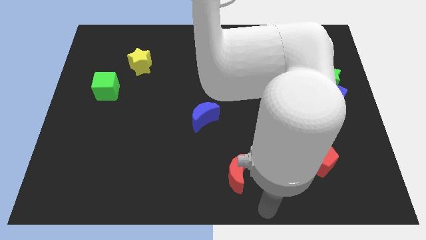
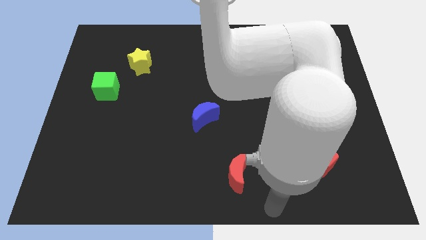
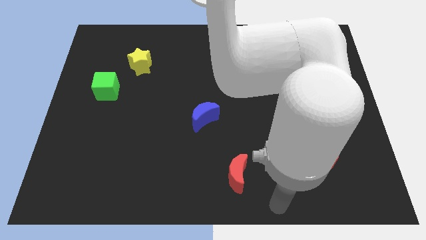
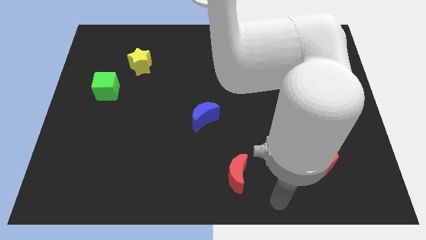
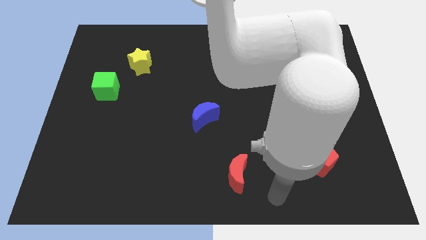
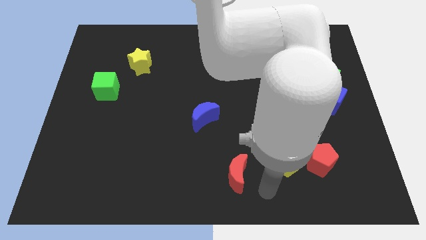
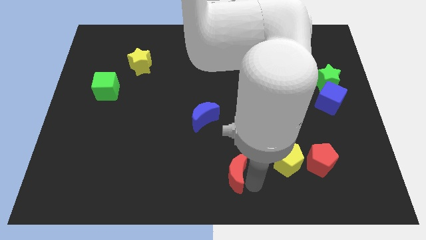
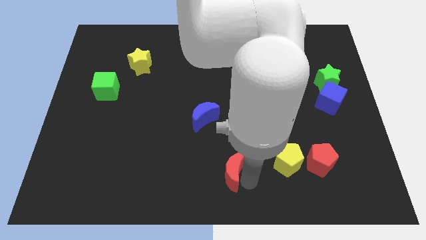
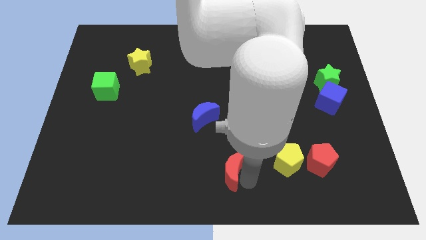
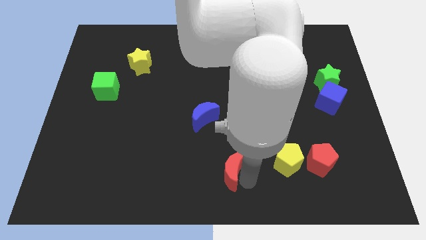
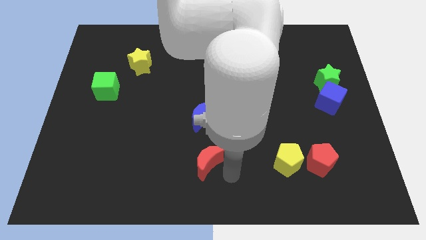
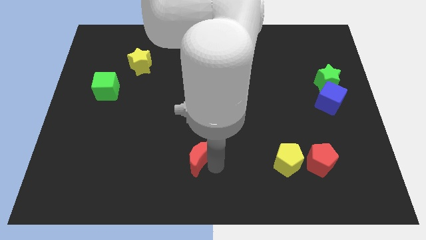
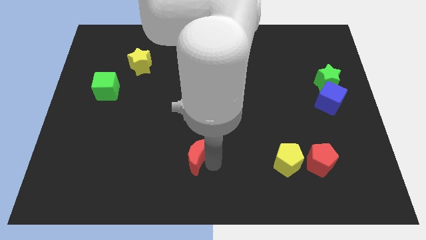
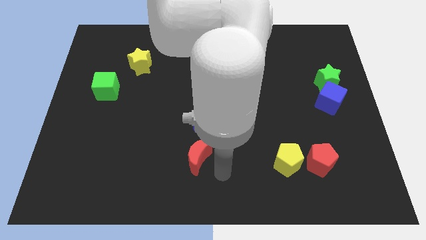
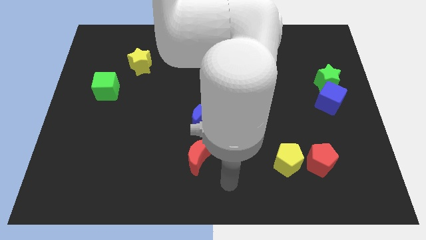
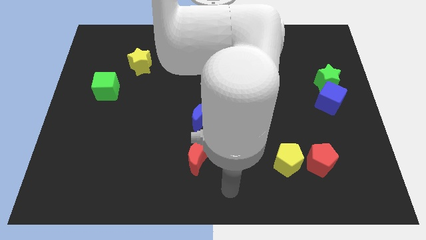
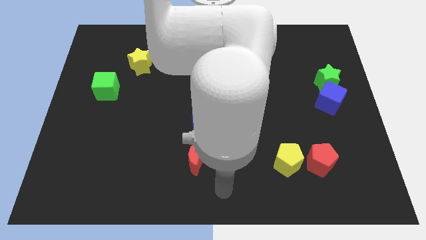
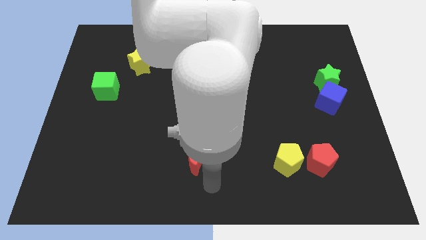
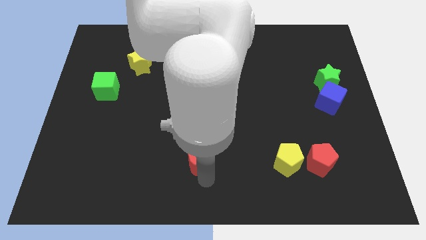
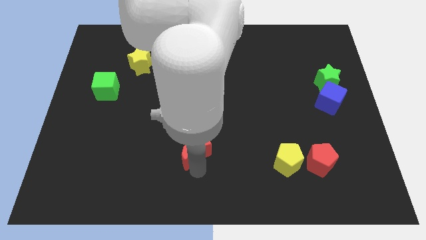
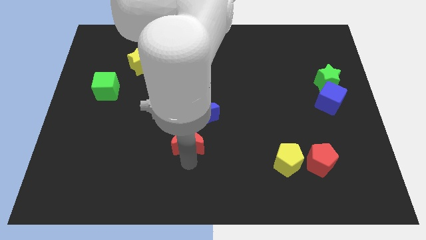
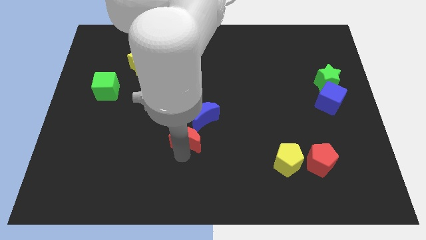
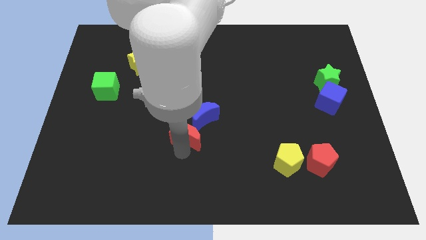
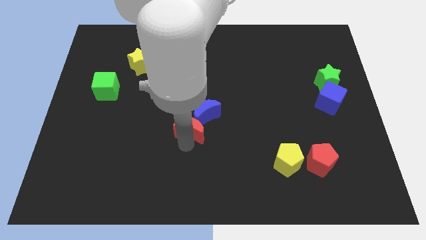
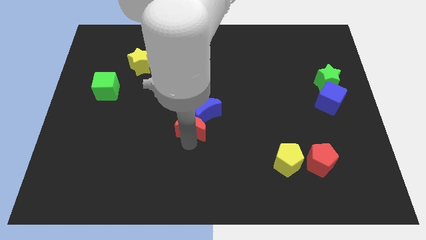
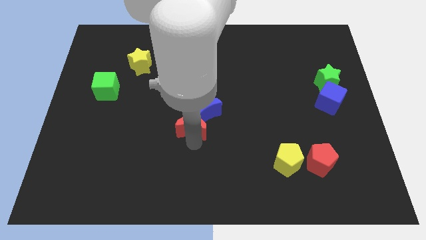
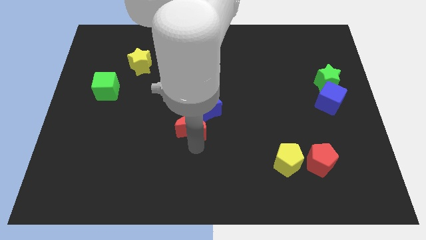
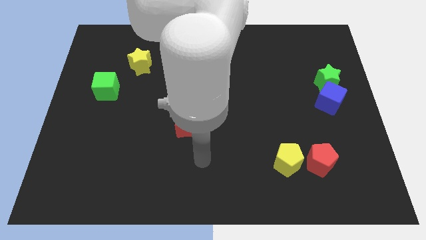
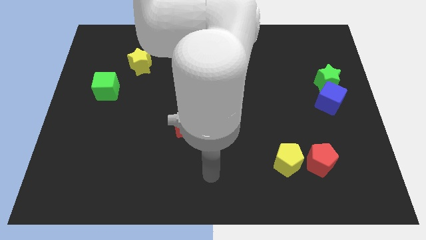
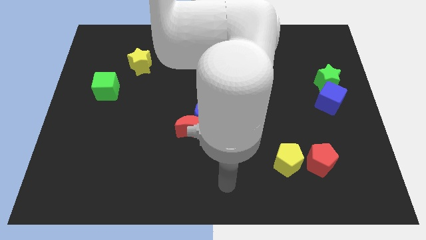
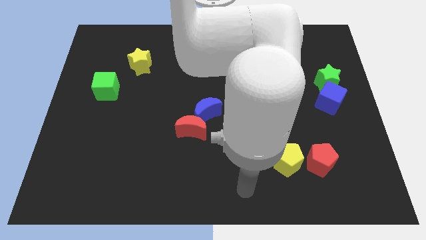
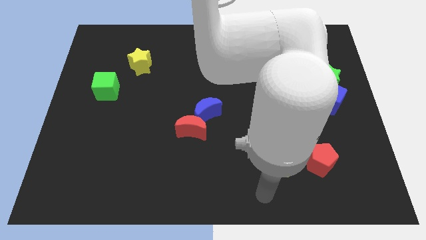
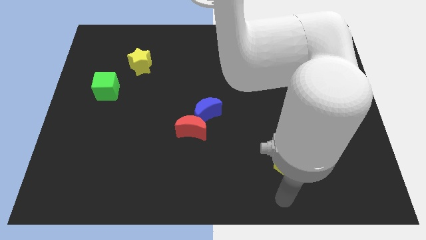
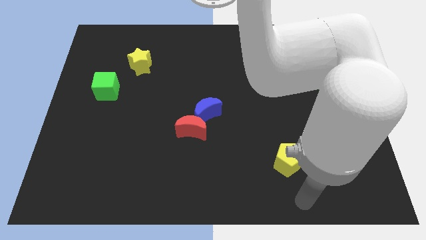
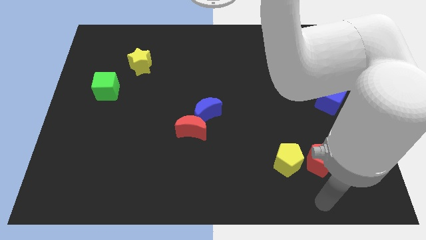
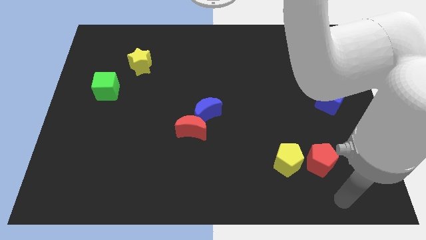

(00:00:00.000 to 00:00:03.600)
move red moon into blue moon

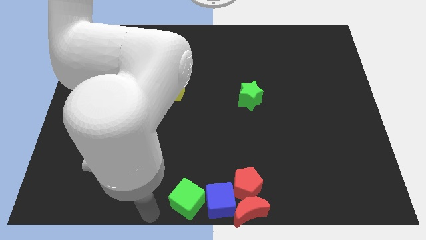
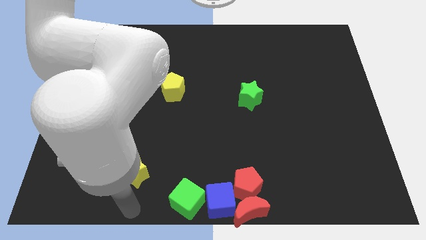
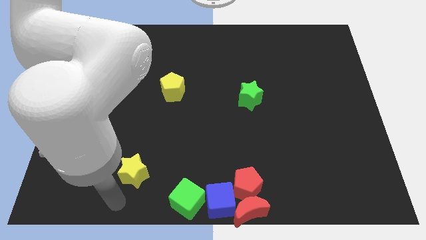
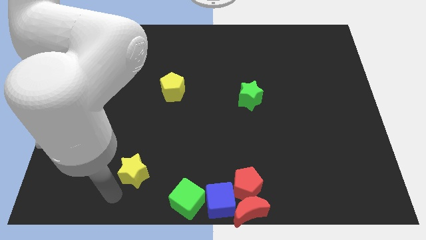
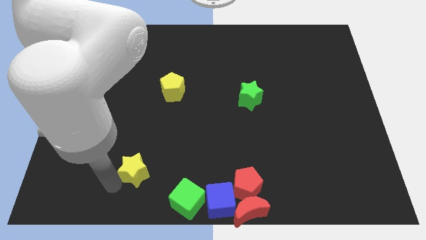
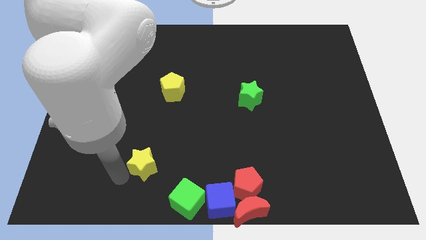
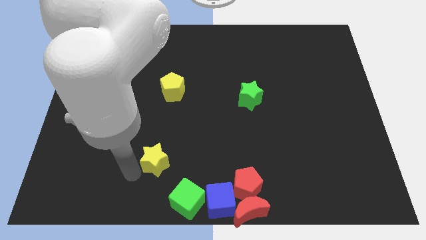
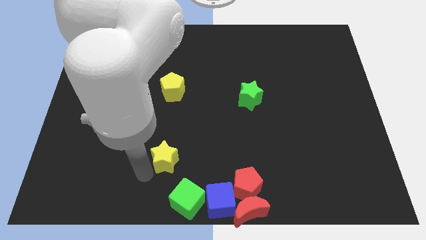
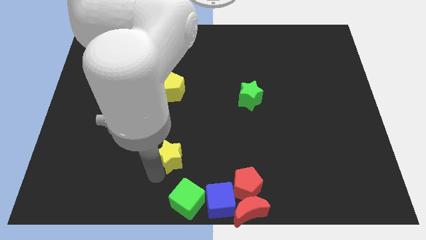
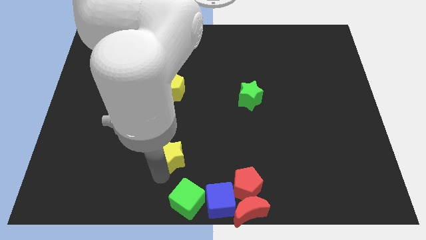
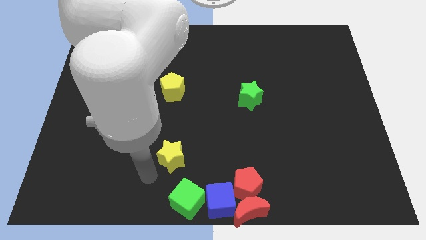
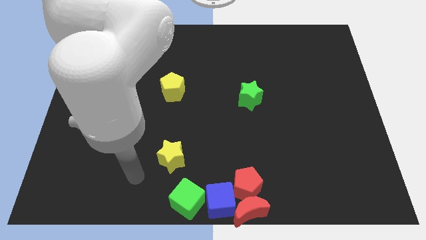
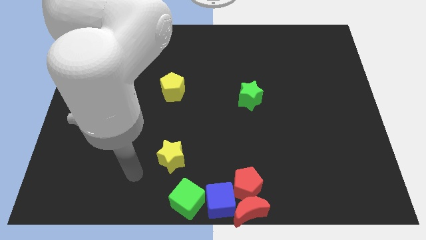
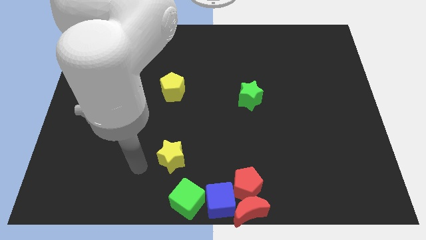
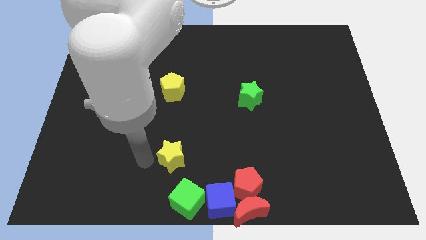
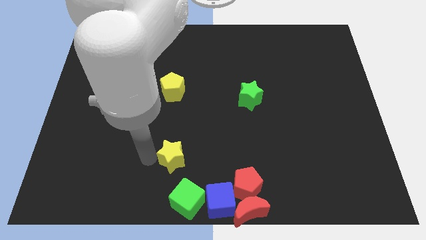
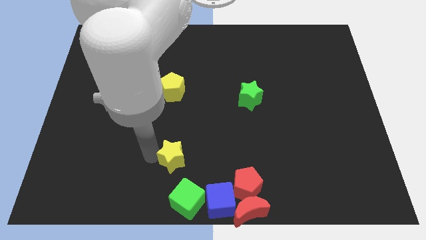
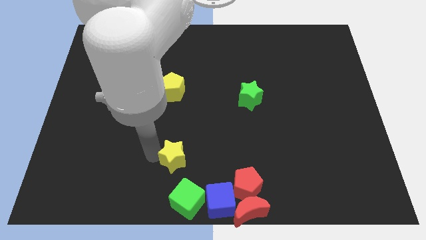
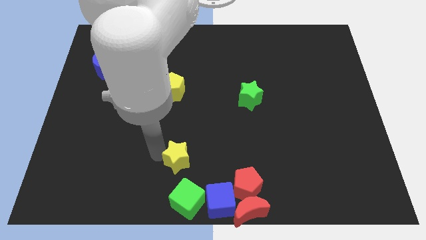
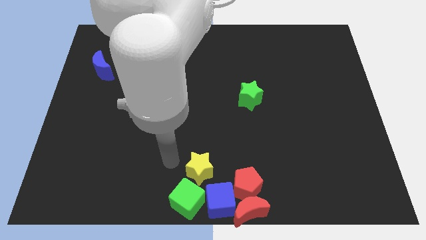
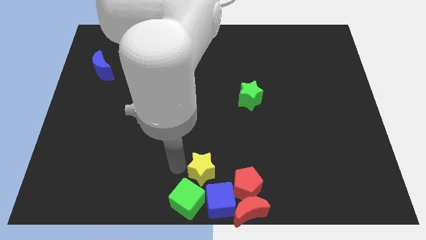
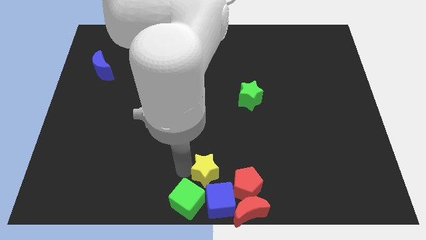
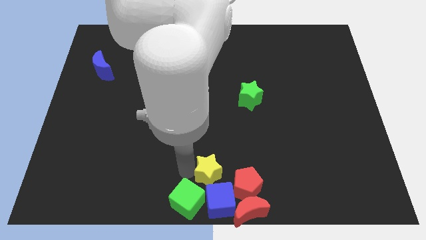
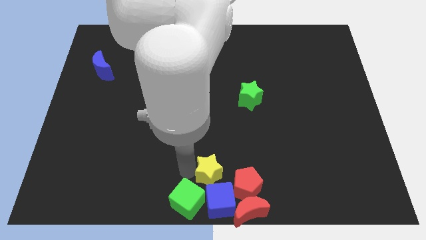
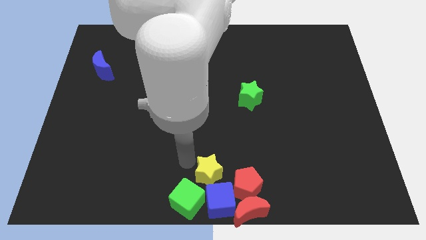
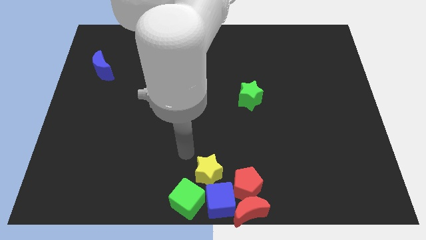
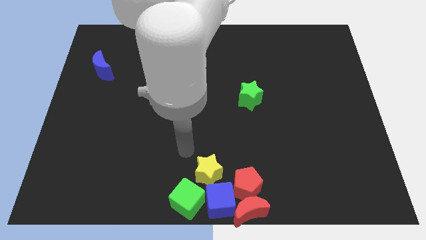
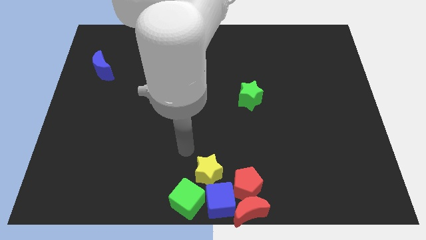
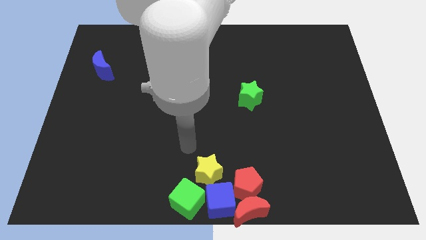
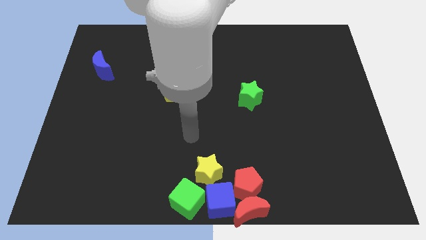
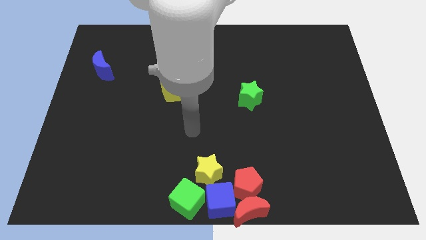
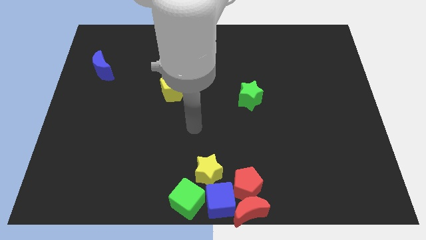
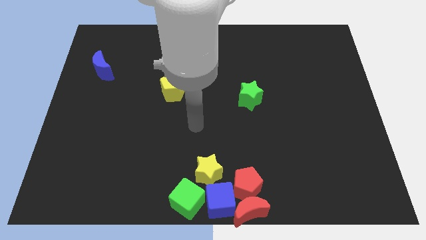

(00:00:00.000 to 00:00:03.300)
move the yellow star to the top of the blue cube

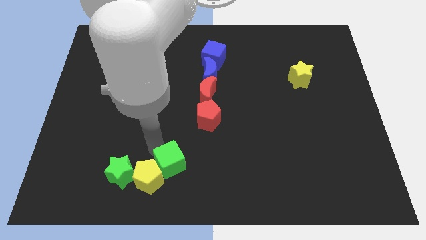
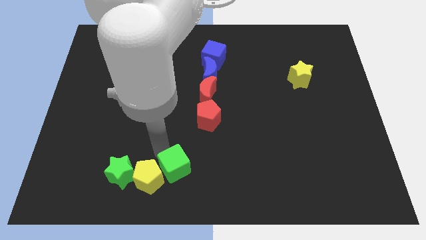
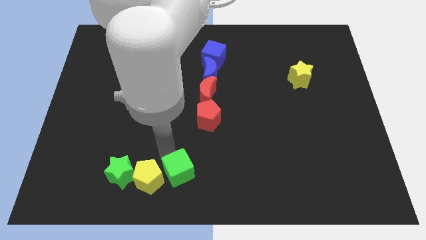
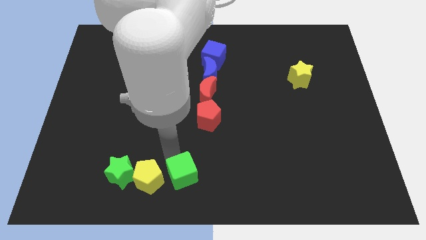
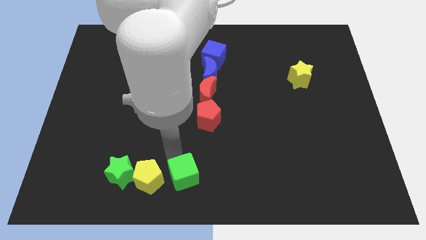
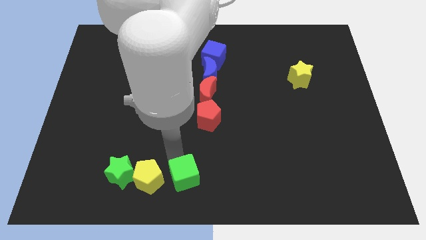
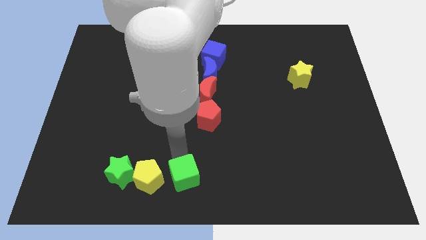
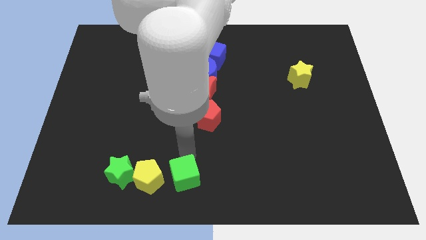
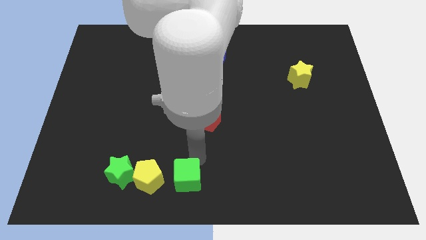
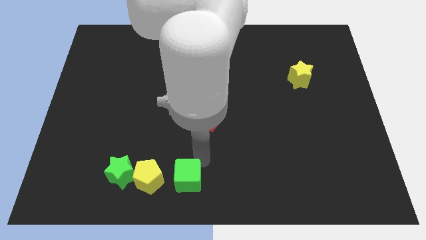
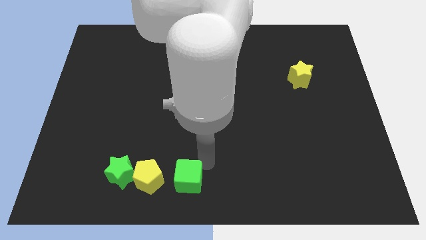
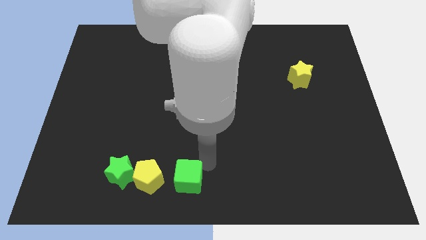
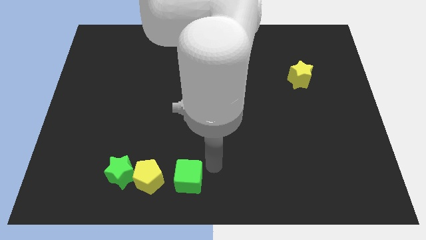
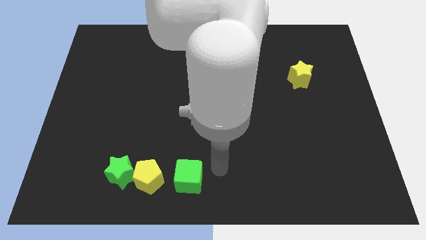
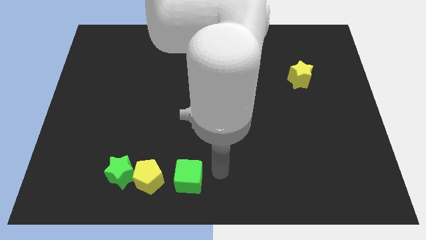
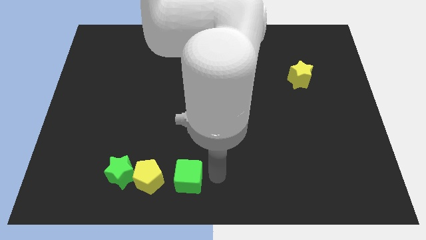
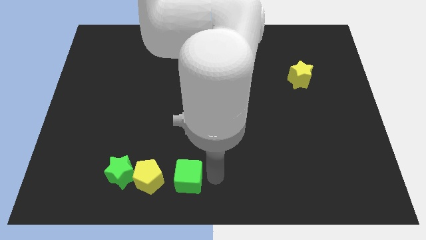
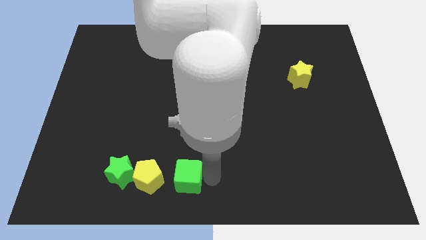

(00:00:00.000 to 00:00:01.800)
place the green cube to the right of the yellow pentagon

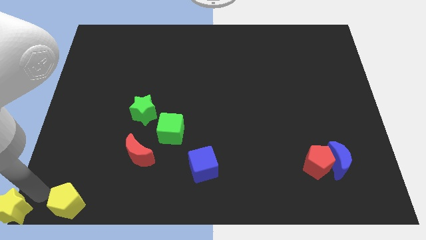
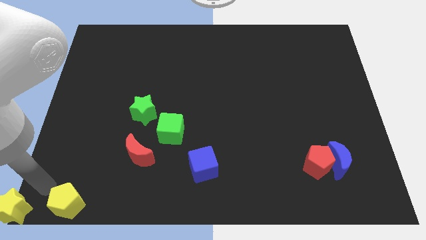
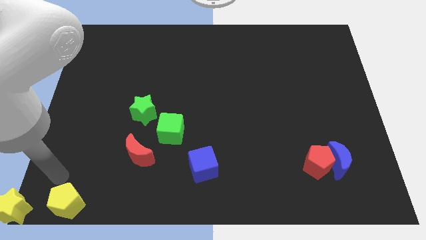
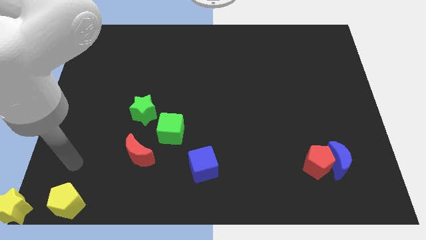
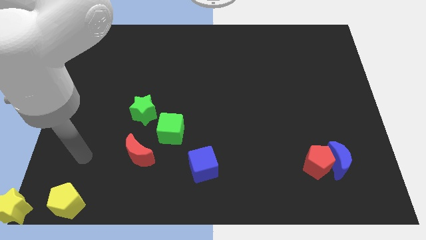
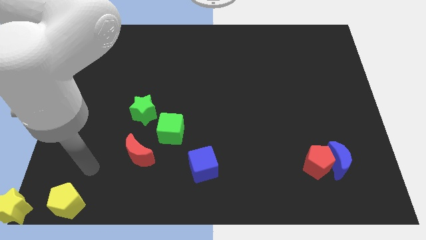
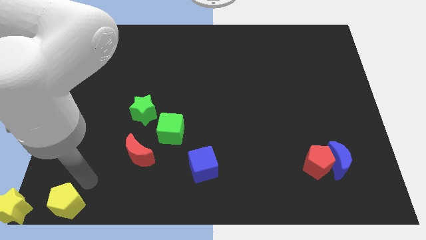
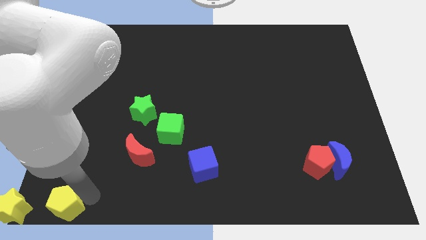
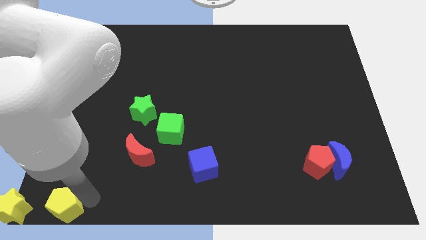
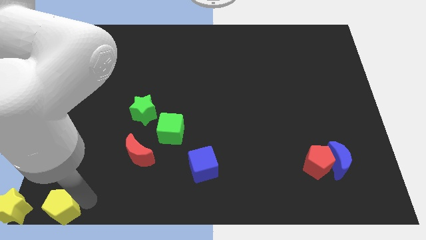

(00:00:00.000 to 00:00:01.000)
push slightly yellow pentagon
